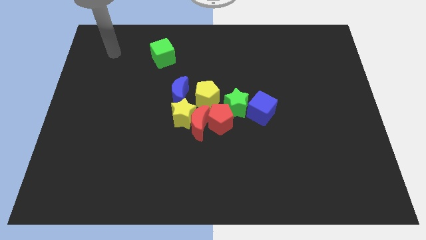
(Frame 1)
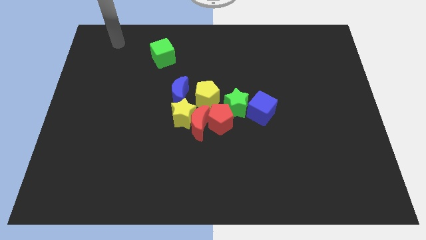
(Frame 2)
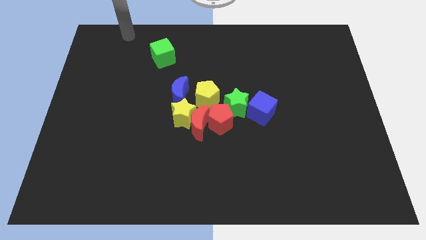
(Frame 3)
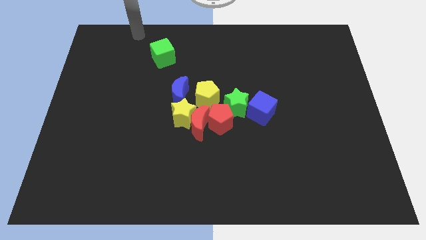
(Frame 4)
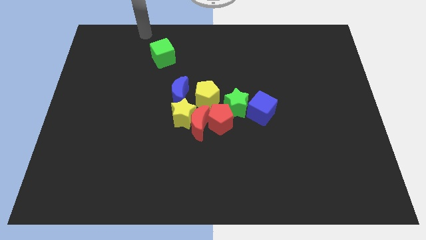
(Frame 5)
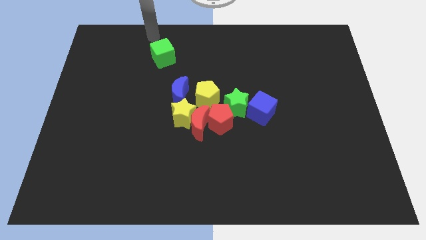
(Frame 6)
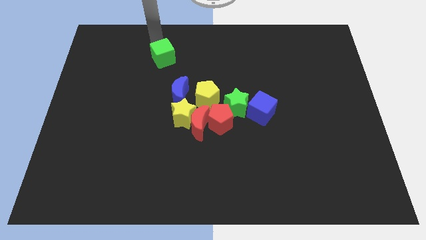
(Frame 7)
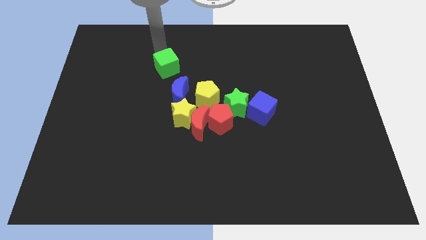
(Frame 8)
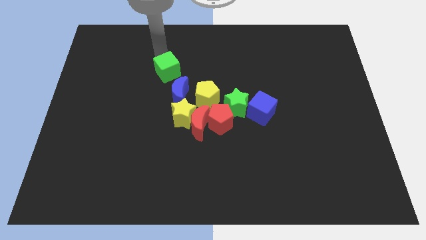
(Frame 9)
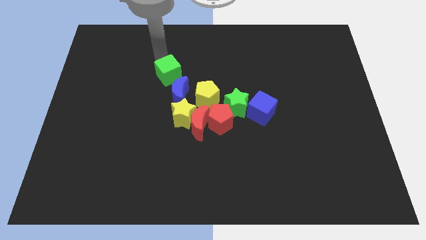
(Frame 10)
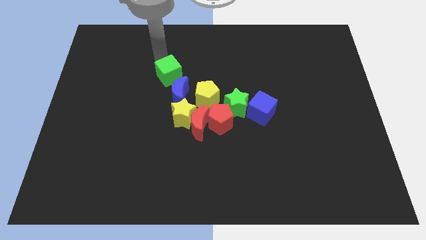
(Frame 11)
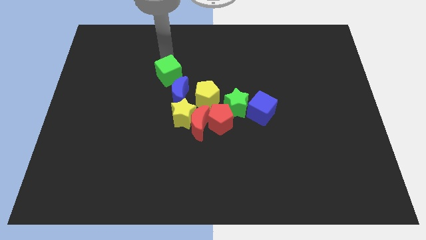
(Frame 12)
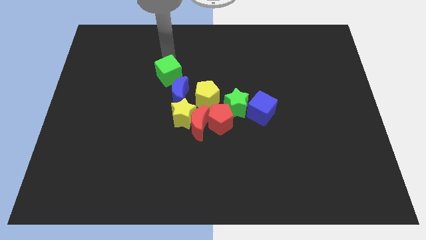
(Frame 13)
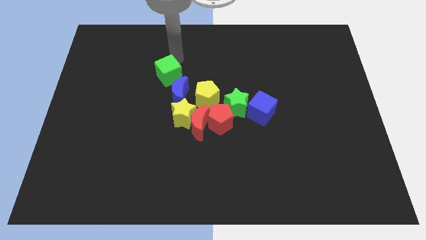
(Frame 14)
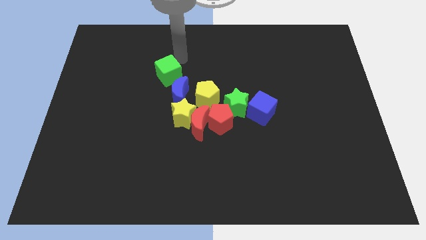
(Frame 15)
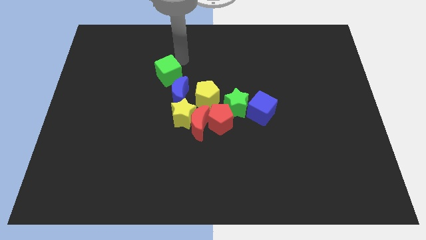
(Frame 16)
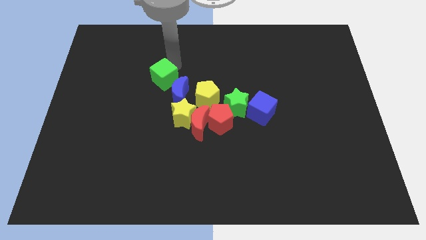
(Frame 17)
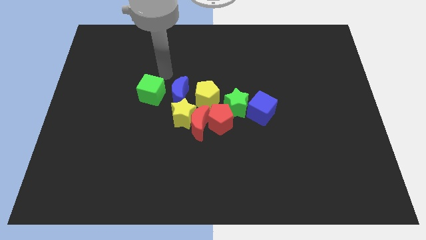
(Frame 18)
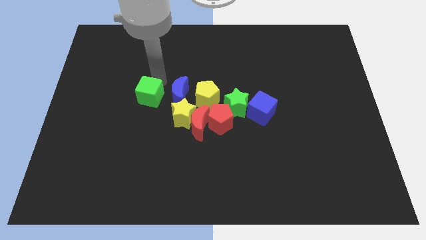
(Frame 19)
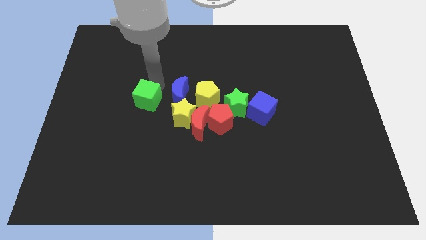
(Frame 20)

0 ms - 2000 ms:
place the green cube to the left of blue moon

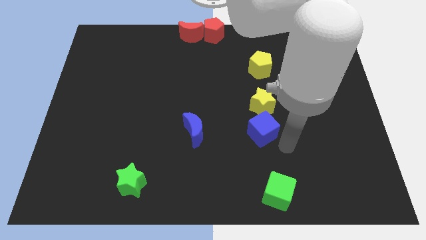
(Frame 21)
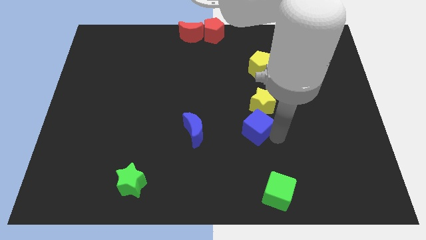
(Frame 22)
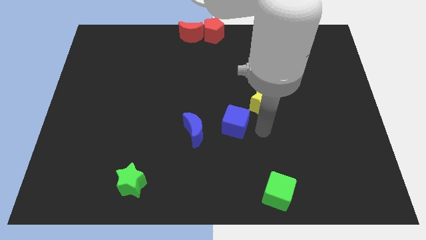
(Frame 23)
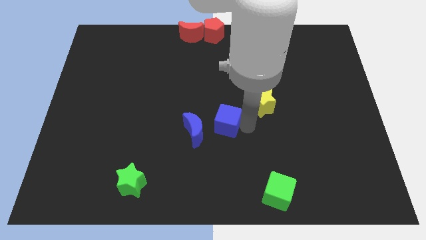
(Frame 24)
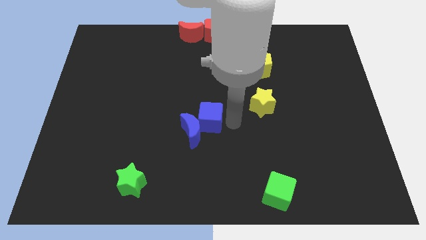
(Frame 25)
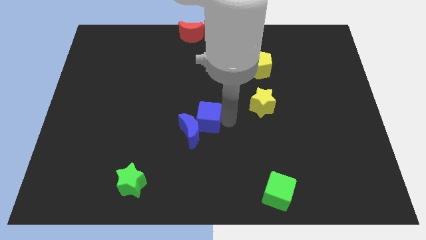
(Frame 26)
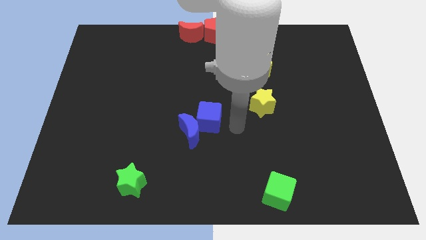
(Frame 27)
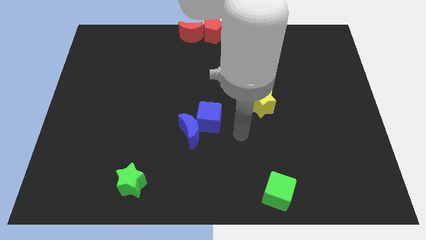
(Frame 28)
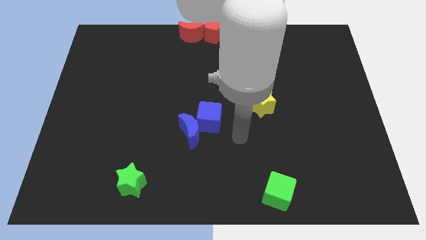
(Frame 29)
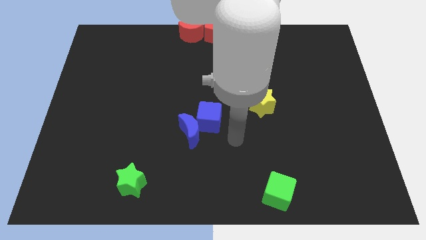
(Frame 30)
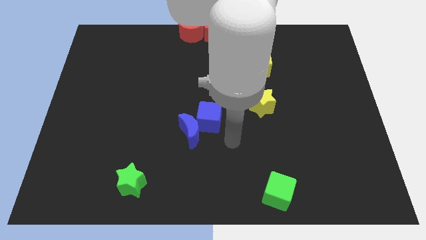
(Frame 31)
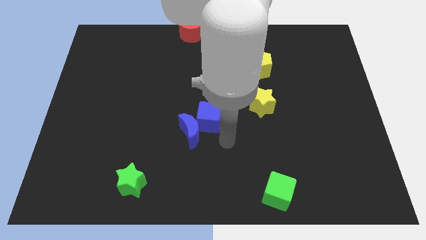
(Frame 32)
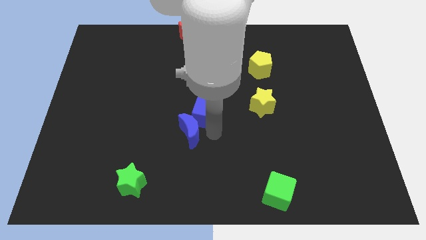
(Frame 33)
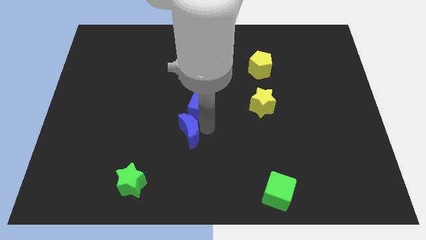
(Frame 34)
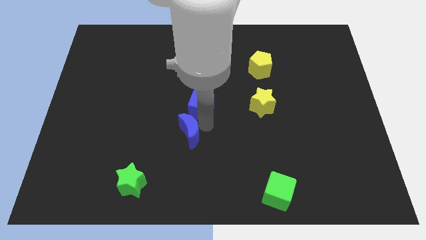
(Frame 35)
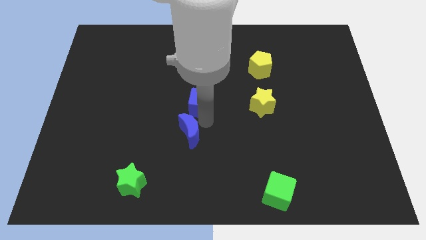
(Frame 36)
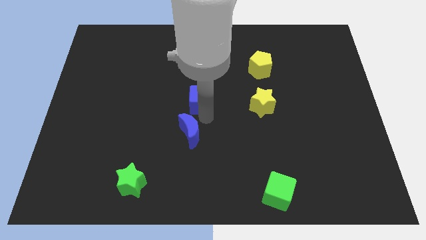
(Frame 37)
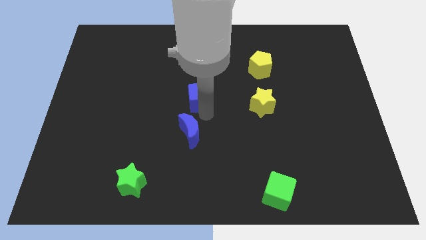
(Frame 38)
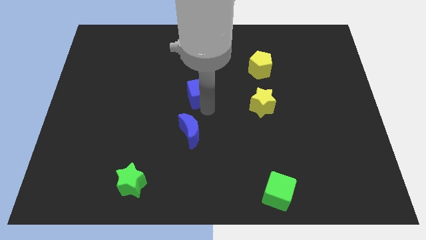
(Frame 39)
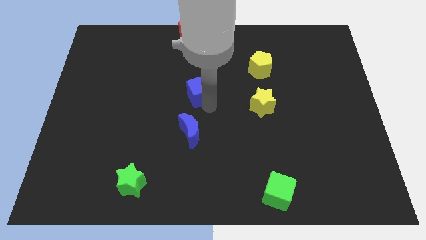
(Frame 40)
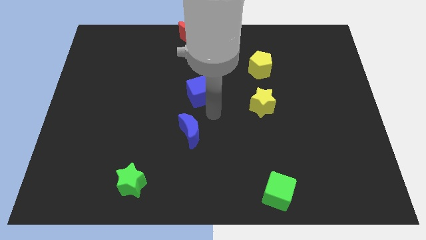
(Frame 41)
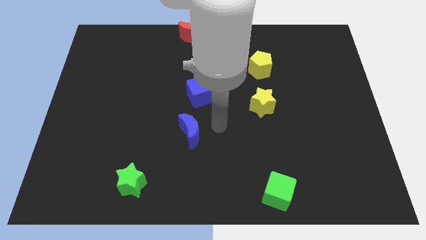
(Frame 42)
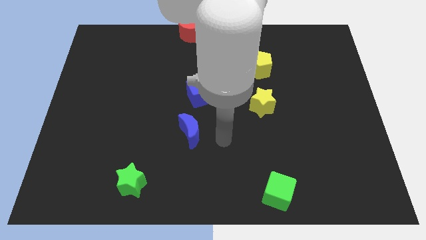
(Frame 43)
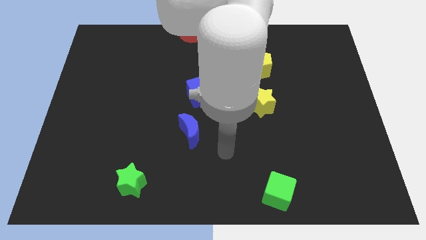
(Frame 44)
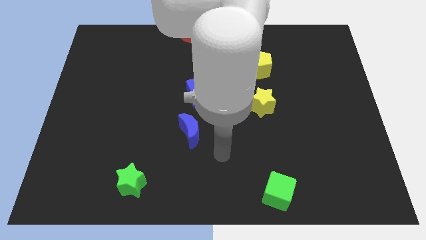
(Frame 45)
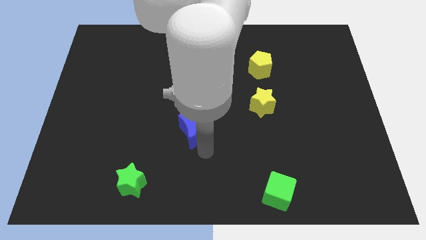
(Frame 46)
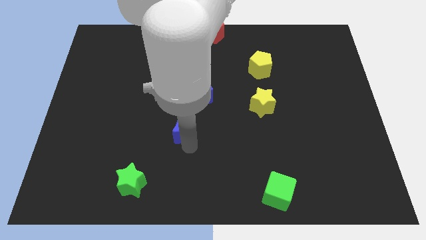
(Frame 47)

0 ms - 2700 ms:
separate blue cube from yellow star

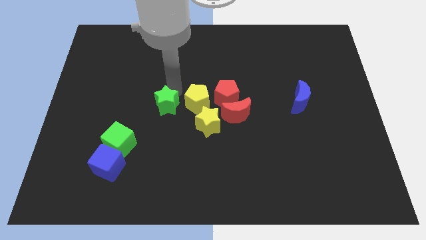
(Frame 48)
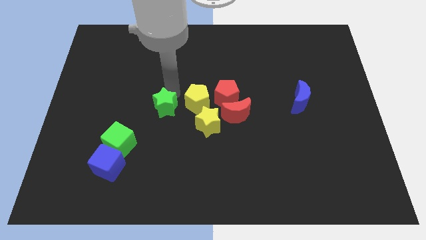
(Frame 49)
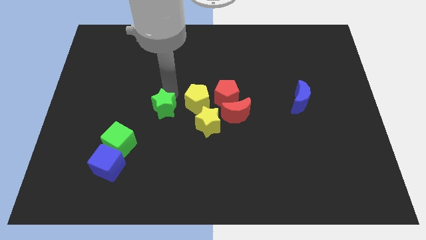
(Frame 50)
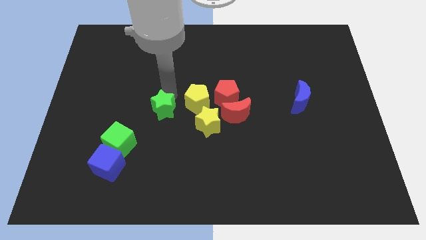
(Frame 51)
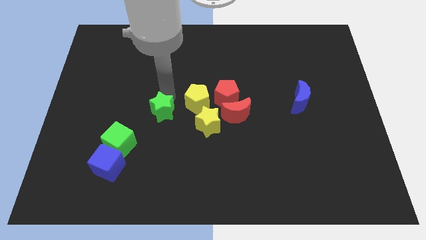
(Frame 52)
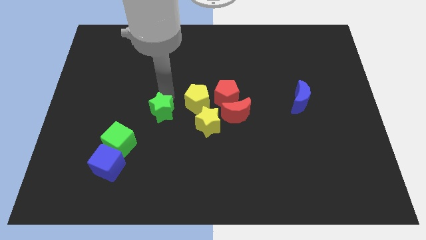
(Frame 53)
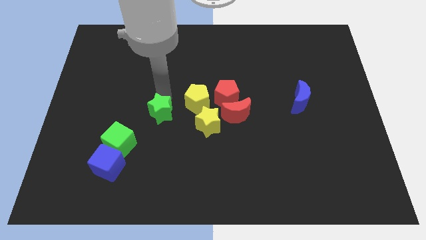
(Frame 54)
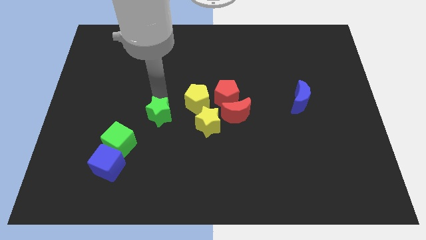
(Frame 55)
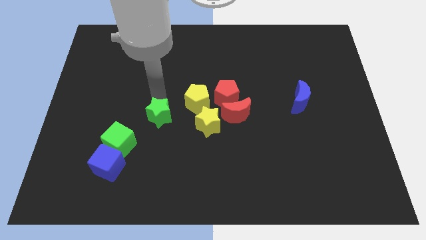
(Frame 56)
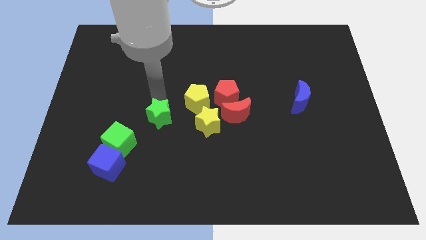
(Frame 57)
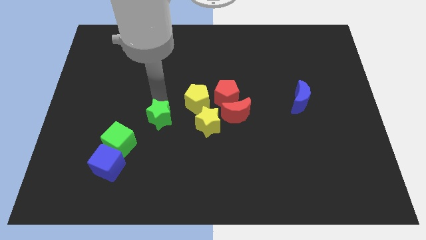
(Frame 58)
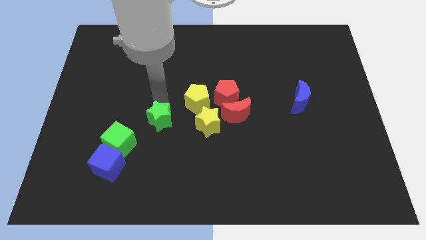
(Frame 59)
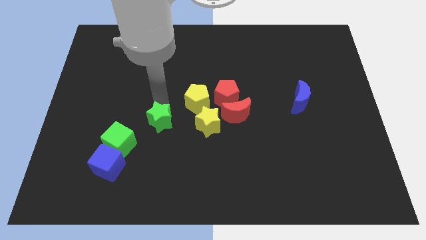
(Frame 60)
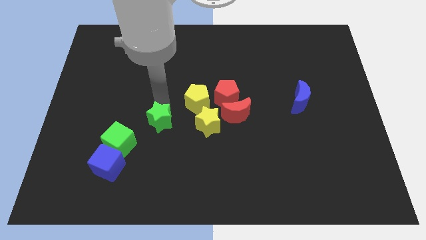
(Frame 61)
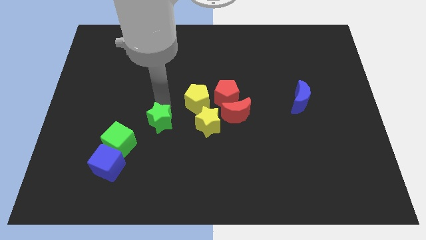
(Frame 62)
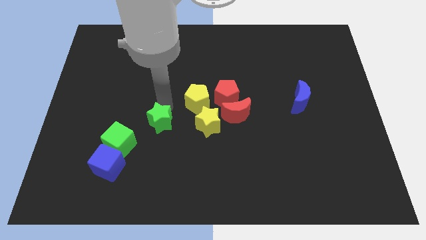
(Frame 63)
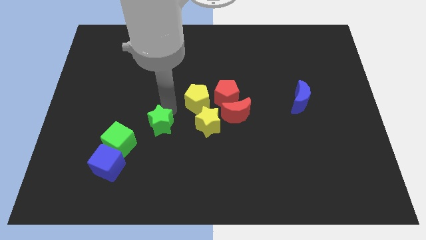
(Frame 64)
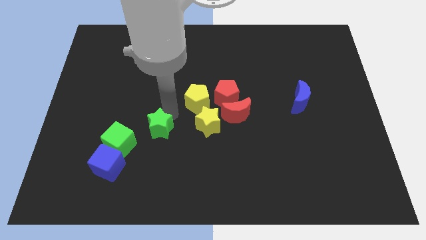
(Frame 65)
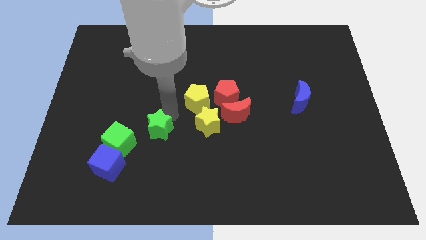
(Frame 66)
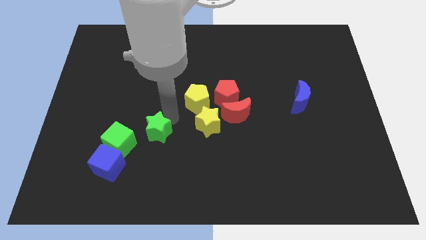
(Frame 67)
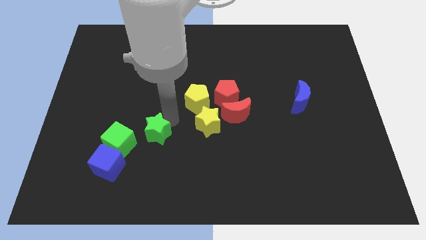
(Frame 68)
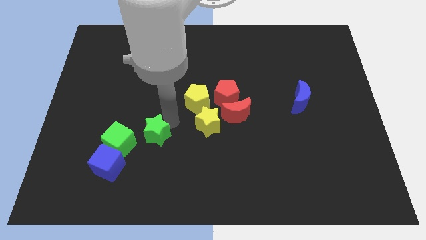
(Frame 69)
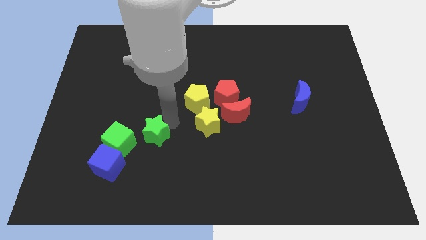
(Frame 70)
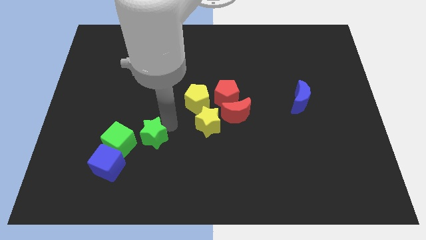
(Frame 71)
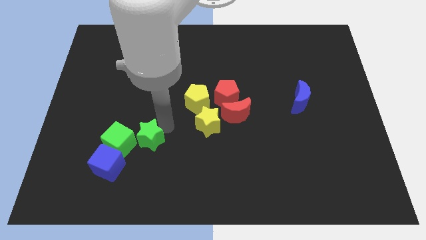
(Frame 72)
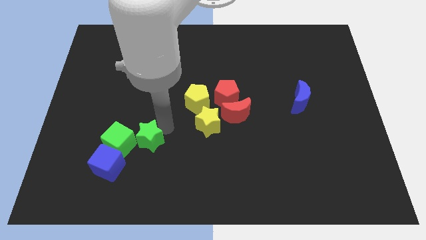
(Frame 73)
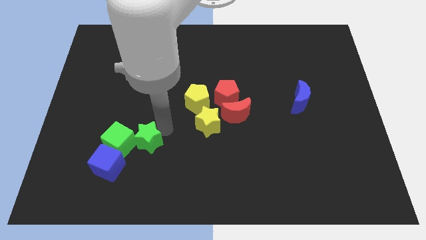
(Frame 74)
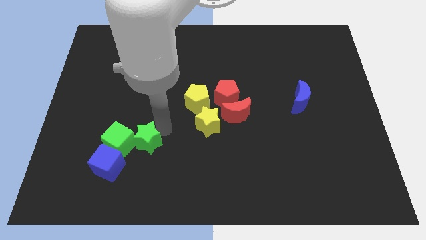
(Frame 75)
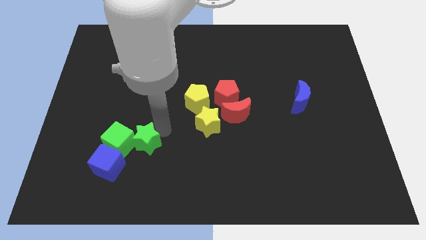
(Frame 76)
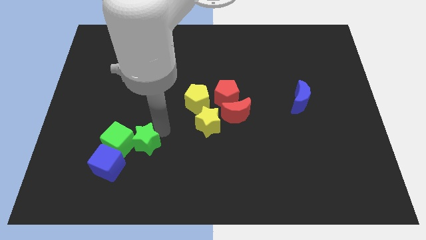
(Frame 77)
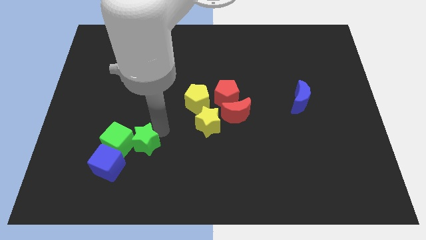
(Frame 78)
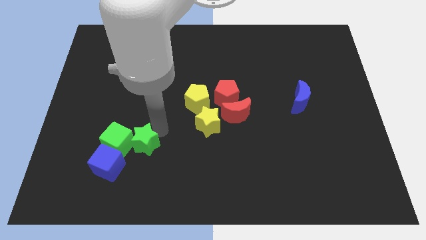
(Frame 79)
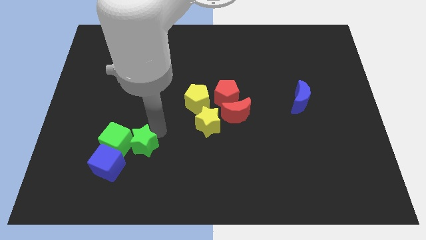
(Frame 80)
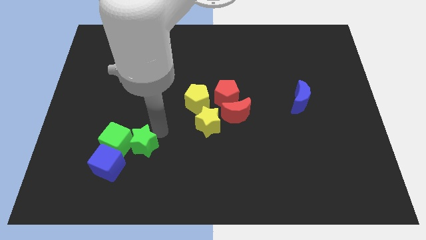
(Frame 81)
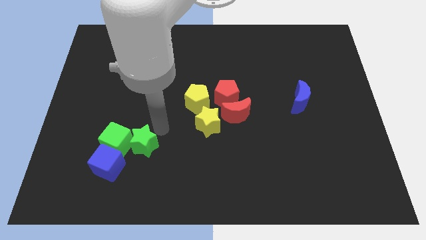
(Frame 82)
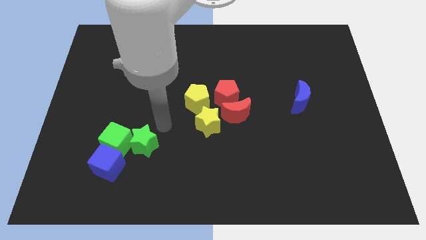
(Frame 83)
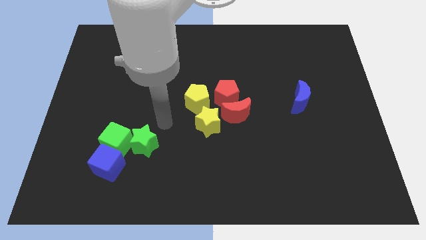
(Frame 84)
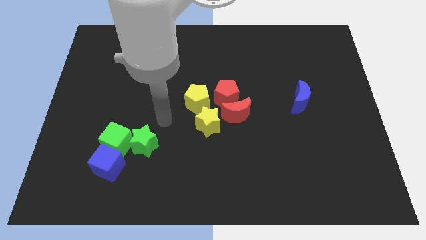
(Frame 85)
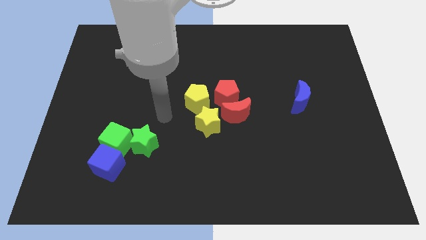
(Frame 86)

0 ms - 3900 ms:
move the green star to the right of the green cube

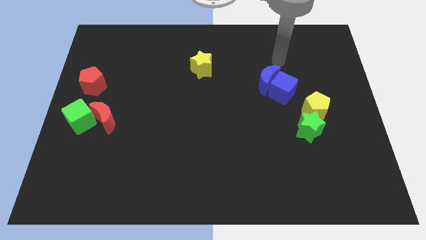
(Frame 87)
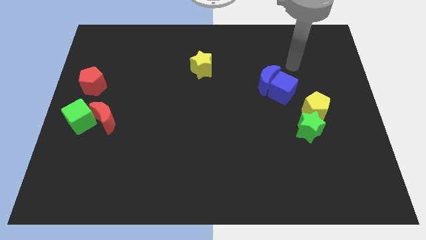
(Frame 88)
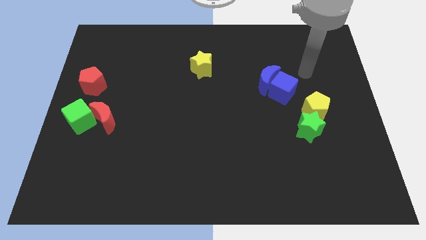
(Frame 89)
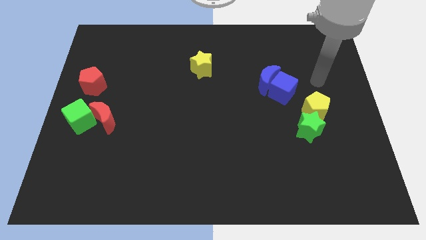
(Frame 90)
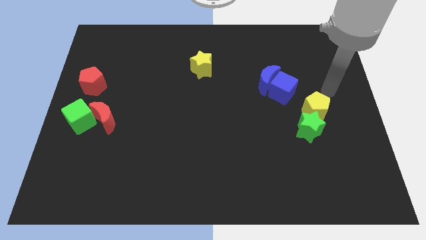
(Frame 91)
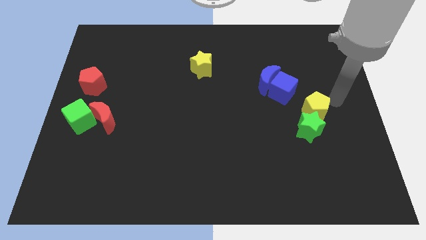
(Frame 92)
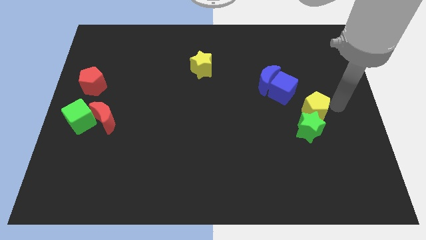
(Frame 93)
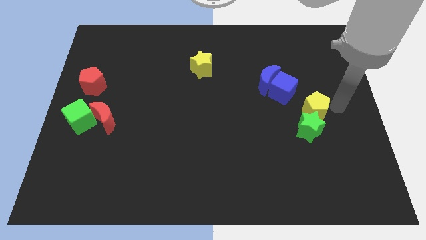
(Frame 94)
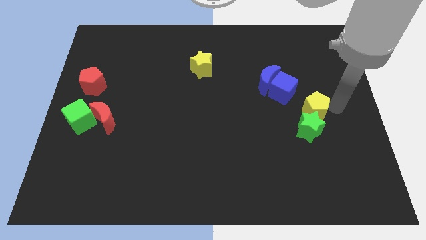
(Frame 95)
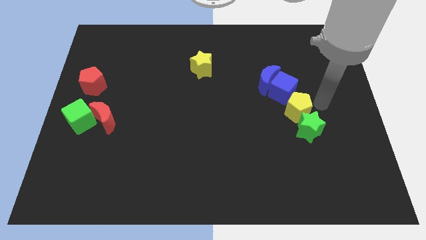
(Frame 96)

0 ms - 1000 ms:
point your arm at the right of the yellow pentagon
